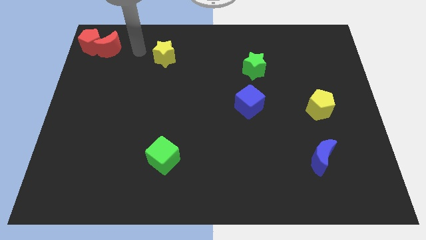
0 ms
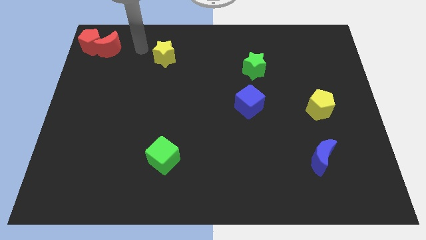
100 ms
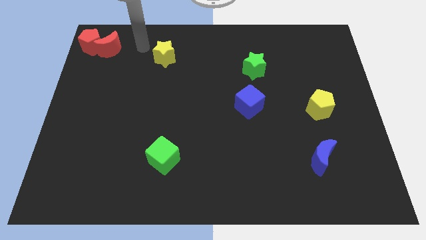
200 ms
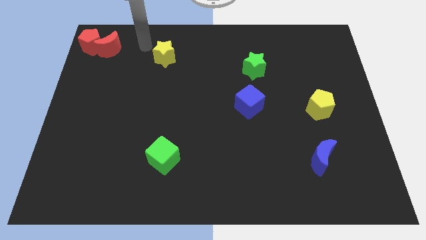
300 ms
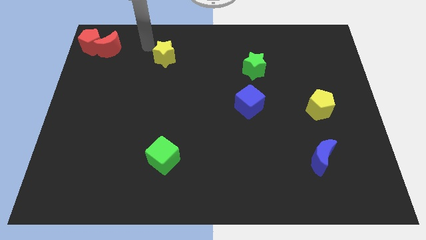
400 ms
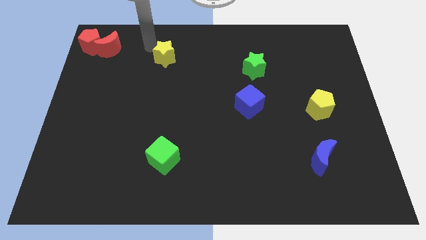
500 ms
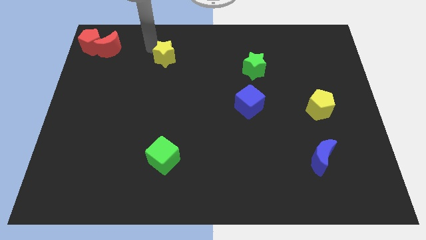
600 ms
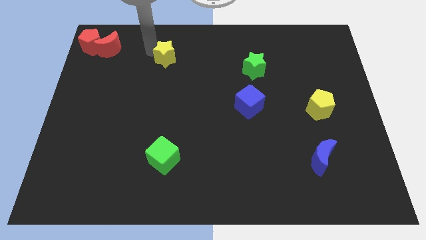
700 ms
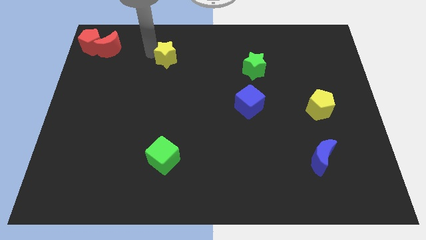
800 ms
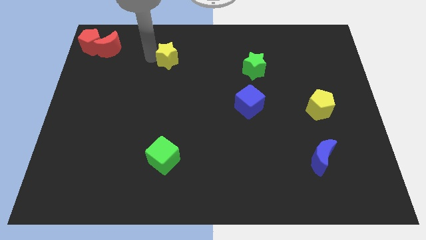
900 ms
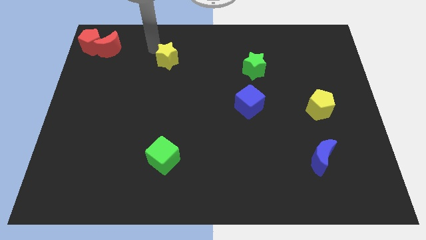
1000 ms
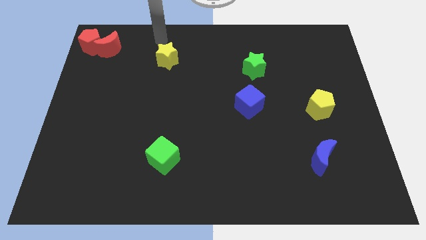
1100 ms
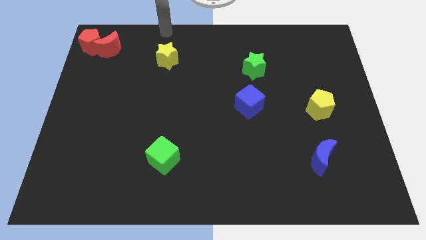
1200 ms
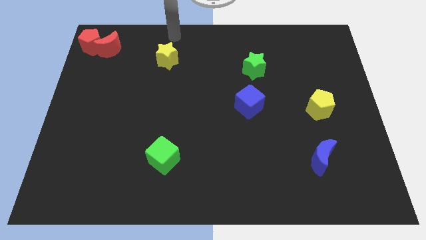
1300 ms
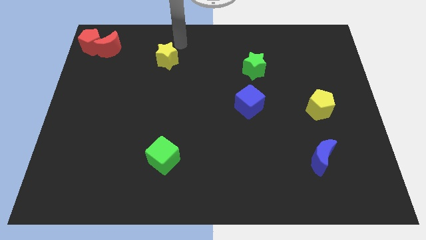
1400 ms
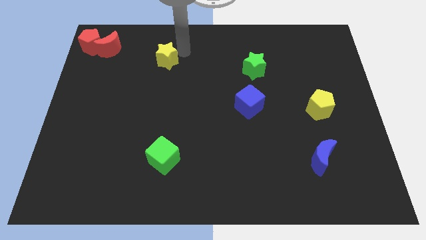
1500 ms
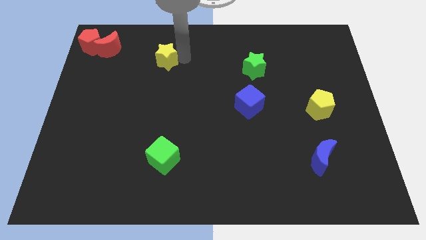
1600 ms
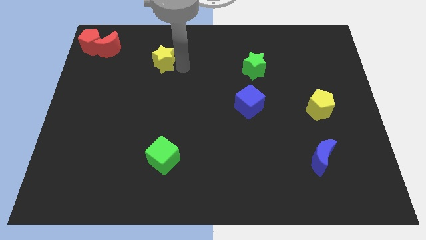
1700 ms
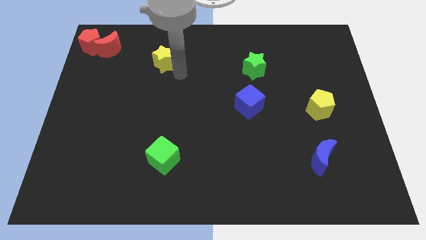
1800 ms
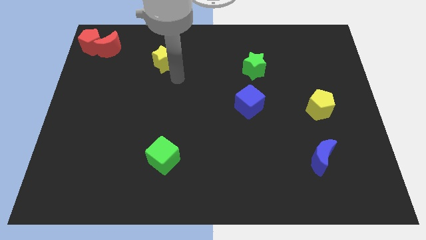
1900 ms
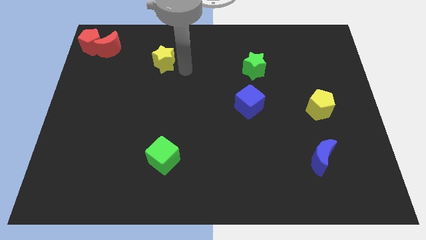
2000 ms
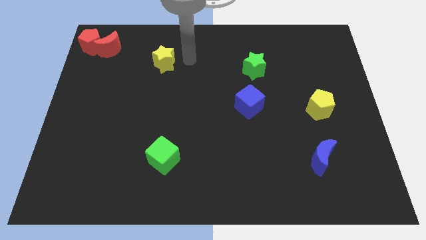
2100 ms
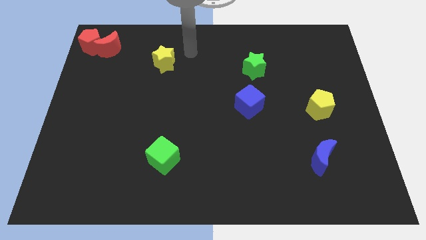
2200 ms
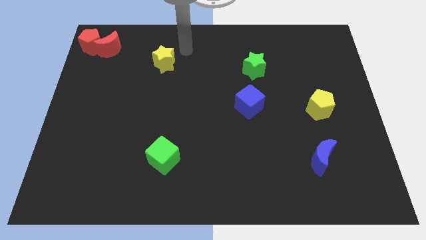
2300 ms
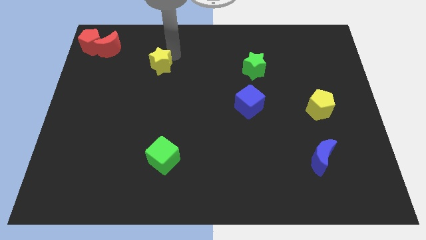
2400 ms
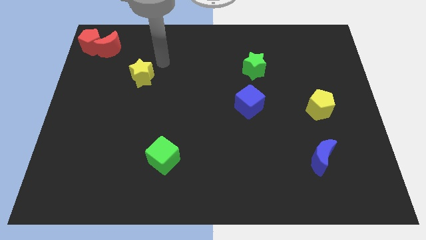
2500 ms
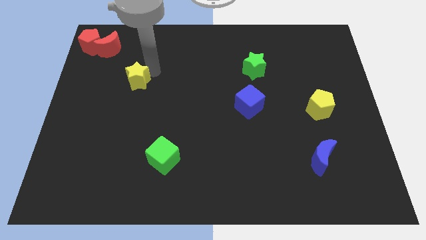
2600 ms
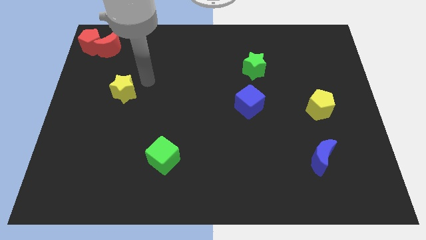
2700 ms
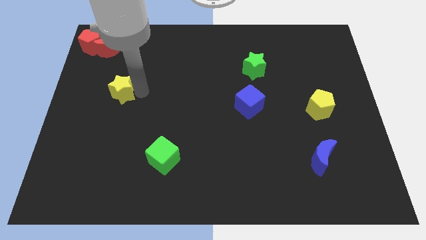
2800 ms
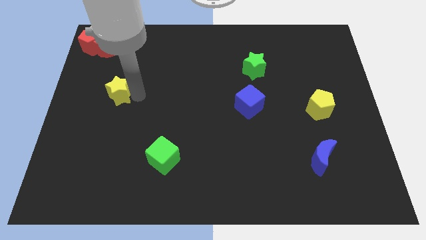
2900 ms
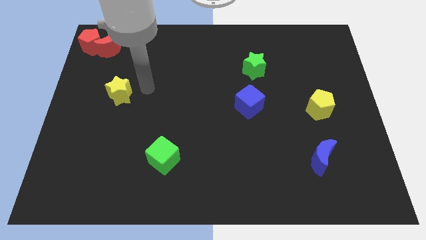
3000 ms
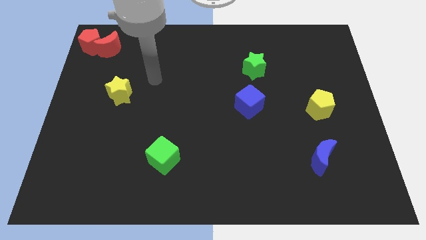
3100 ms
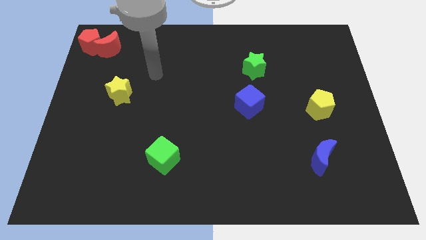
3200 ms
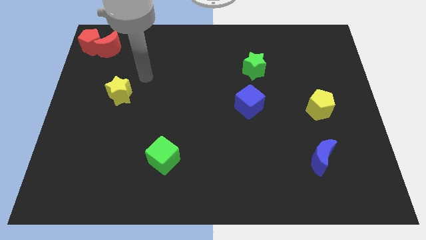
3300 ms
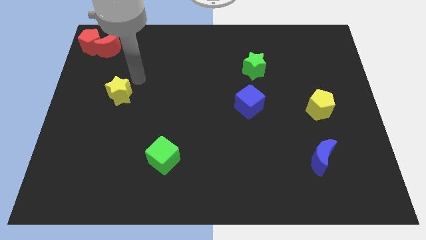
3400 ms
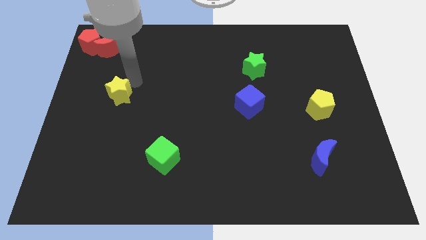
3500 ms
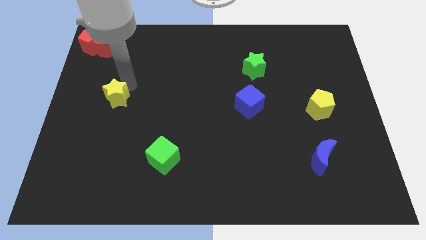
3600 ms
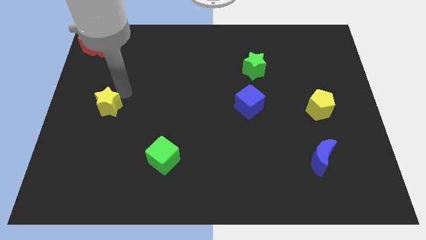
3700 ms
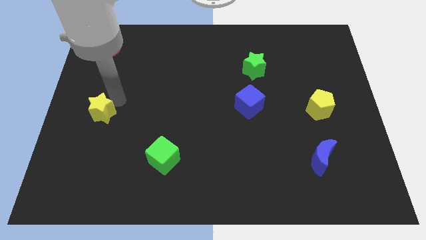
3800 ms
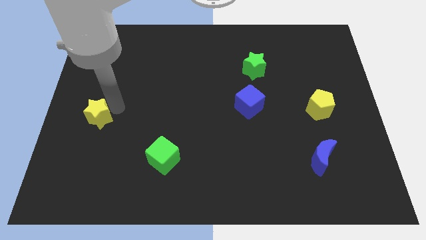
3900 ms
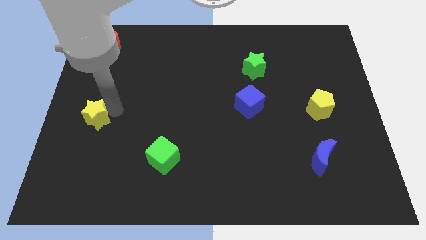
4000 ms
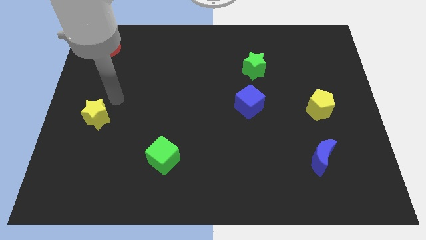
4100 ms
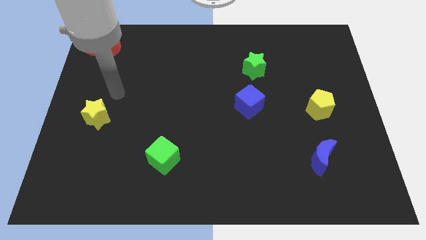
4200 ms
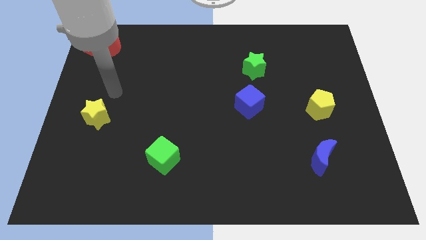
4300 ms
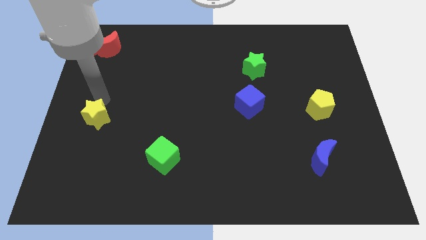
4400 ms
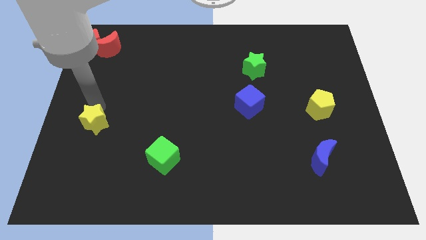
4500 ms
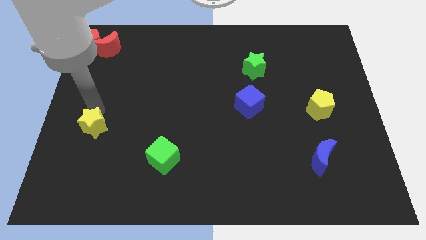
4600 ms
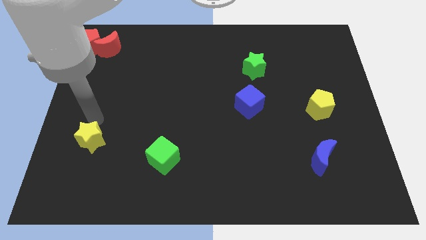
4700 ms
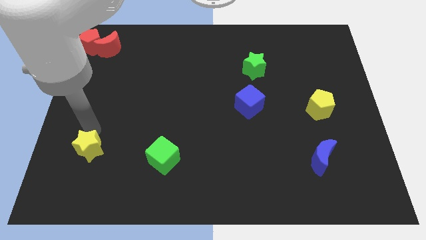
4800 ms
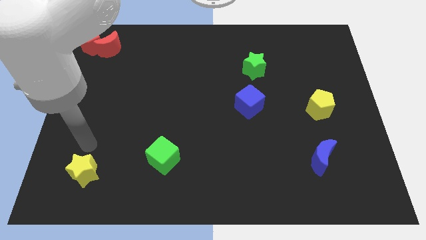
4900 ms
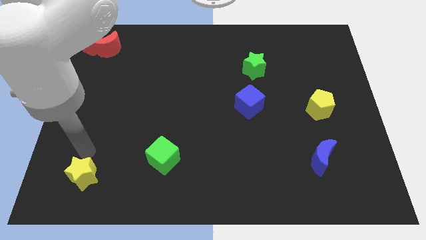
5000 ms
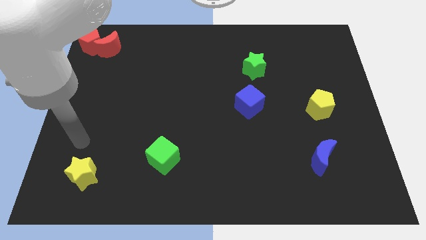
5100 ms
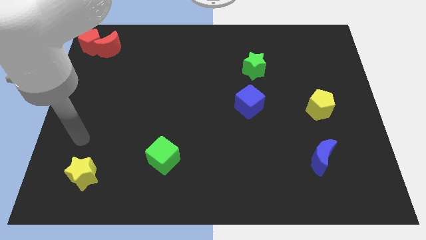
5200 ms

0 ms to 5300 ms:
move the yellow star to the left of the green cube

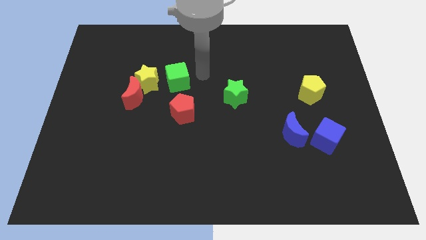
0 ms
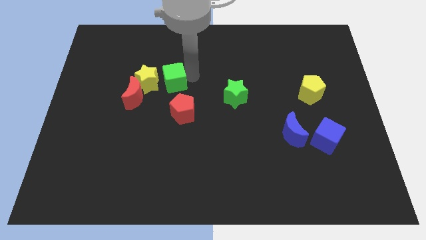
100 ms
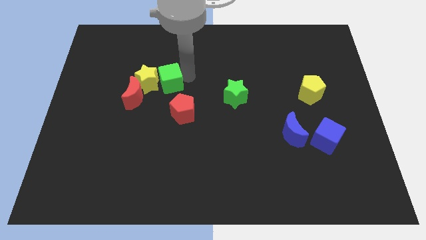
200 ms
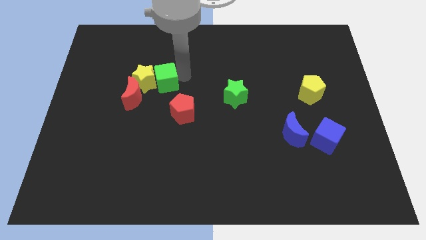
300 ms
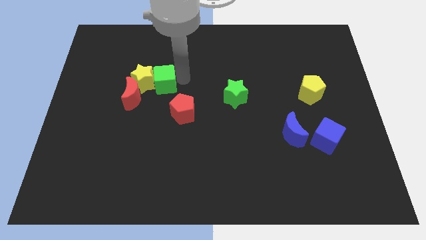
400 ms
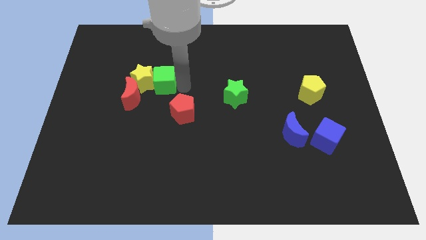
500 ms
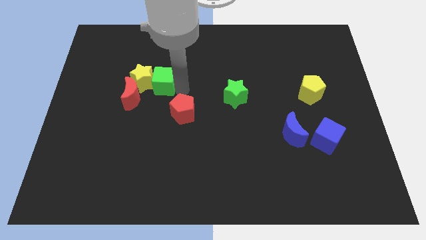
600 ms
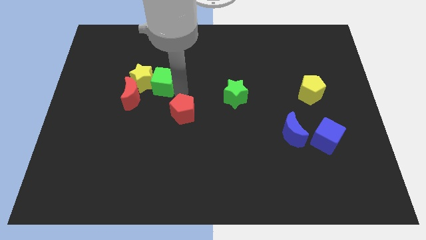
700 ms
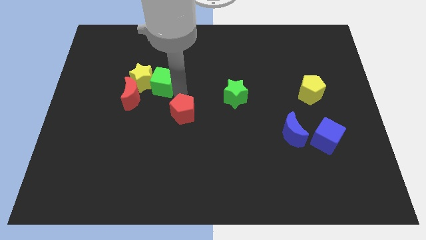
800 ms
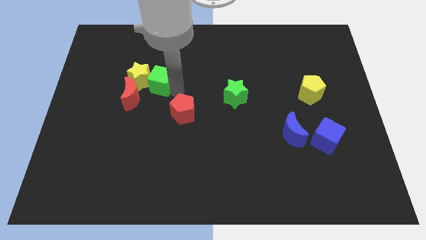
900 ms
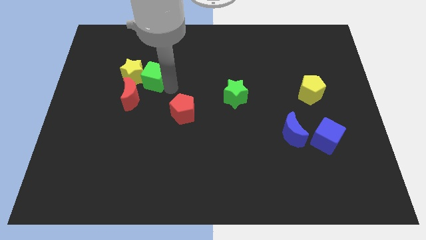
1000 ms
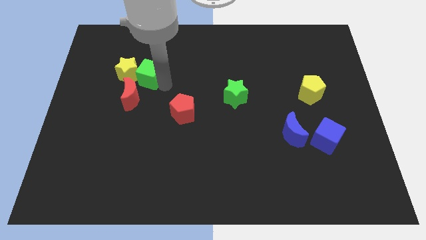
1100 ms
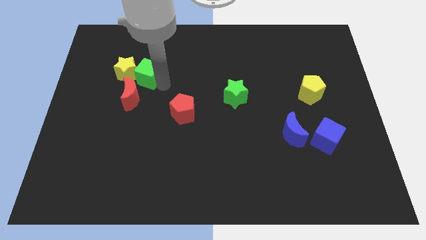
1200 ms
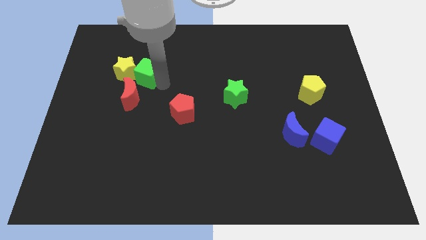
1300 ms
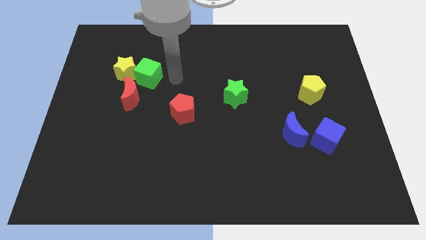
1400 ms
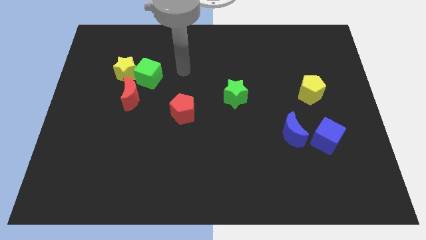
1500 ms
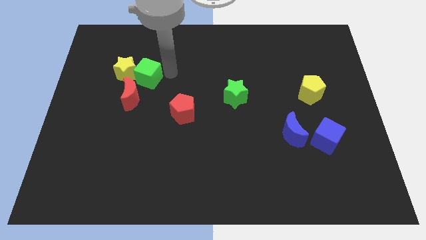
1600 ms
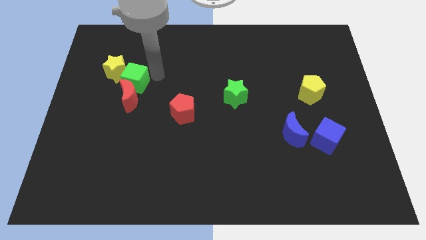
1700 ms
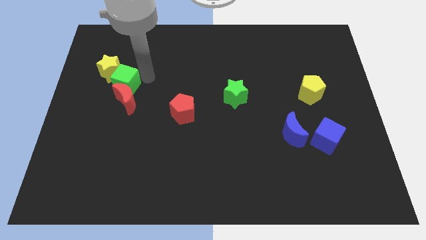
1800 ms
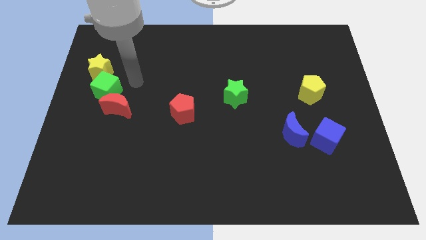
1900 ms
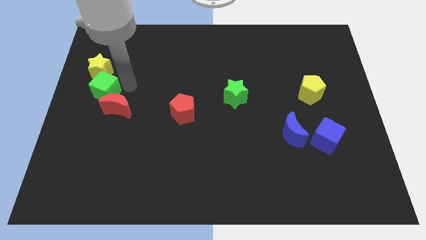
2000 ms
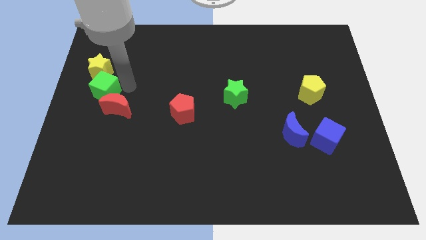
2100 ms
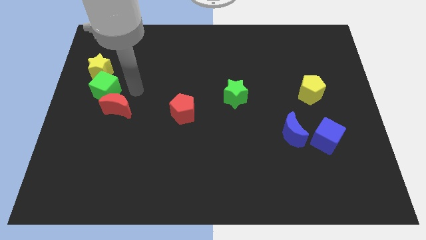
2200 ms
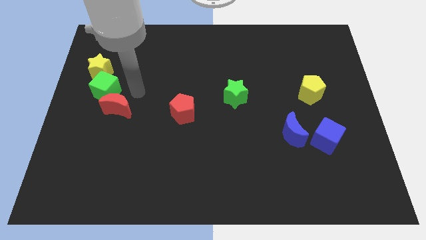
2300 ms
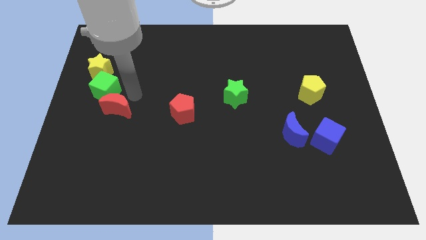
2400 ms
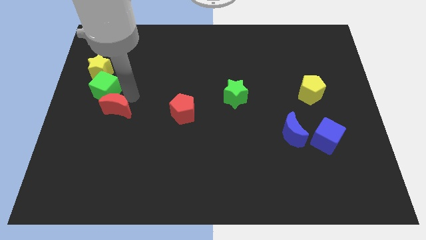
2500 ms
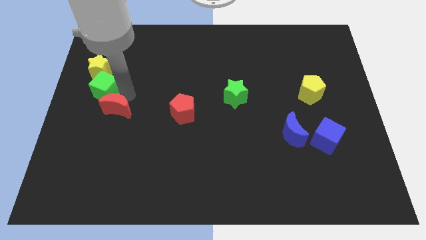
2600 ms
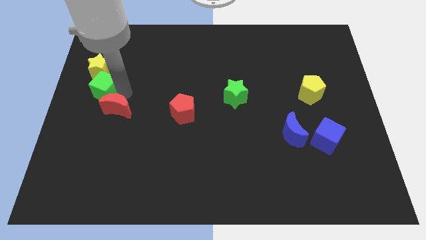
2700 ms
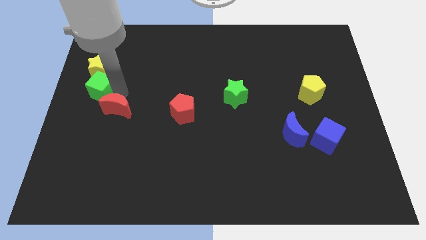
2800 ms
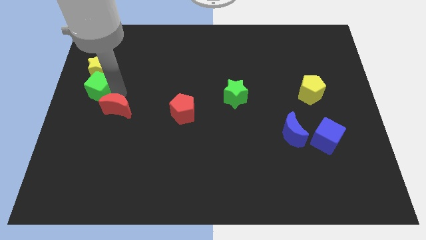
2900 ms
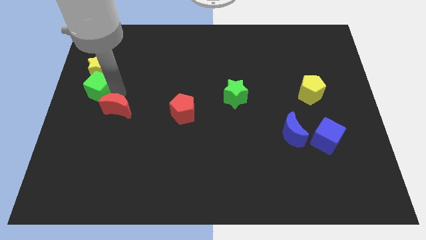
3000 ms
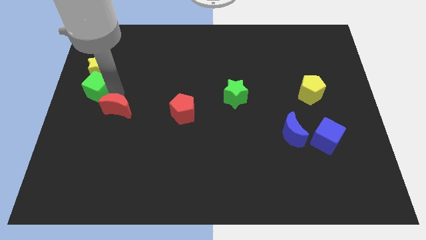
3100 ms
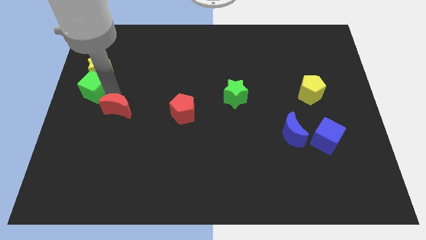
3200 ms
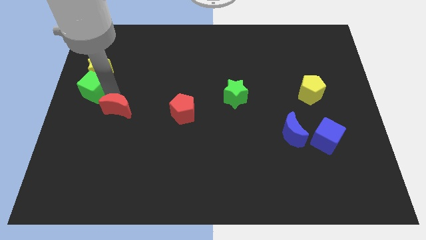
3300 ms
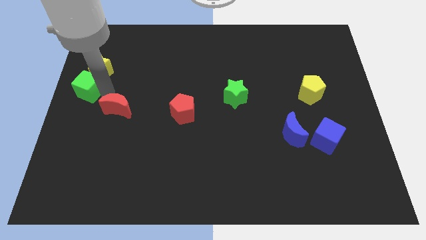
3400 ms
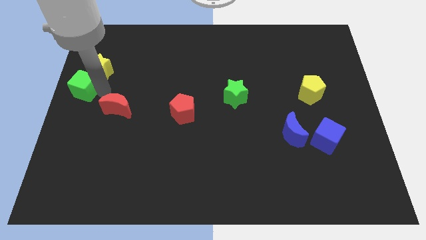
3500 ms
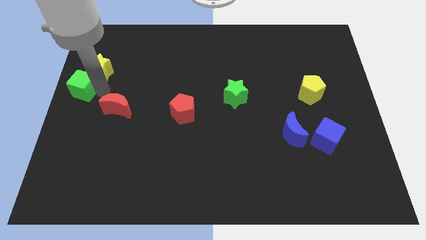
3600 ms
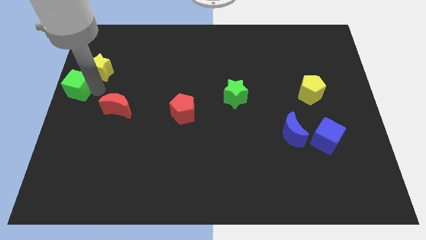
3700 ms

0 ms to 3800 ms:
push the green cube into the yellow star
